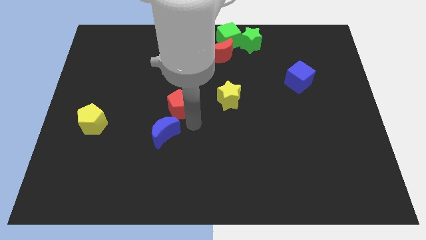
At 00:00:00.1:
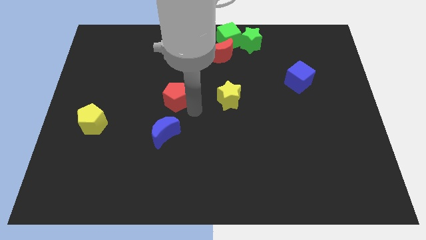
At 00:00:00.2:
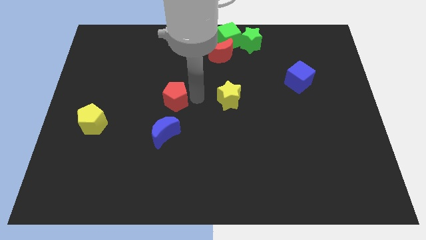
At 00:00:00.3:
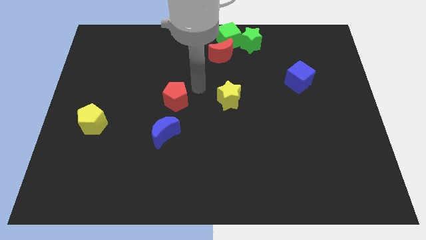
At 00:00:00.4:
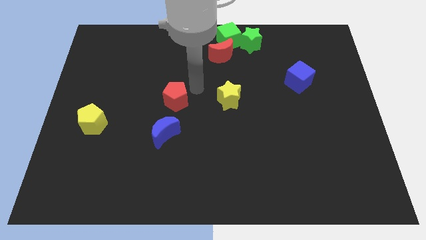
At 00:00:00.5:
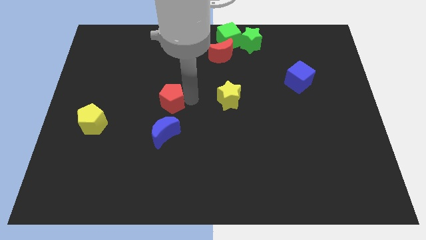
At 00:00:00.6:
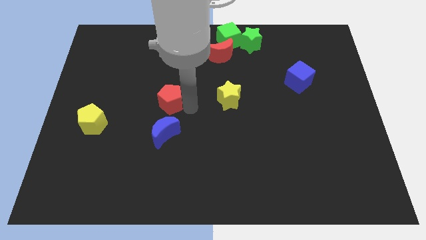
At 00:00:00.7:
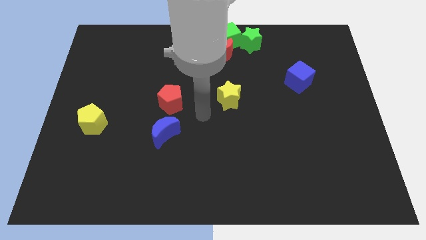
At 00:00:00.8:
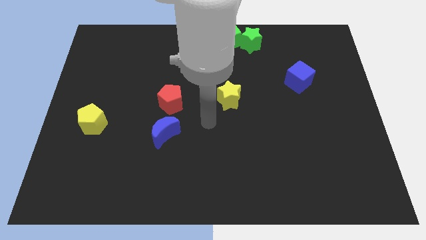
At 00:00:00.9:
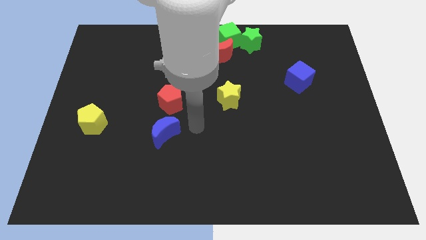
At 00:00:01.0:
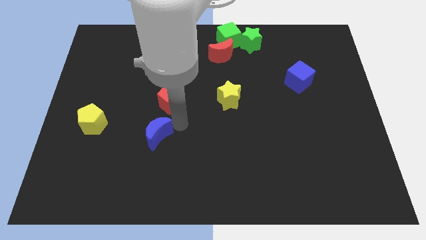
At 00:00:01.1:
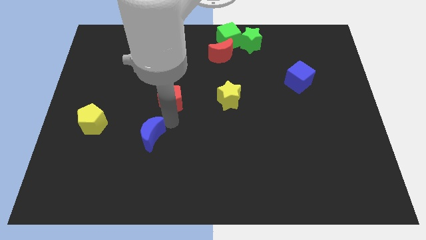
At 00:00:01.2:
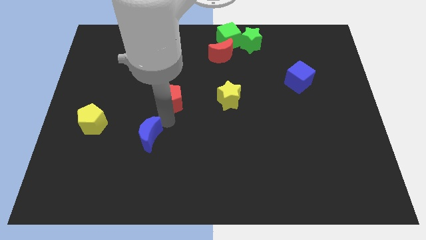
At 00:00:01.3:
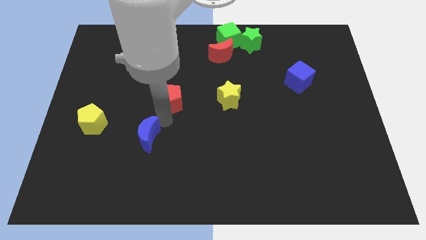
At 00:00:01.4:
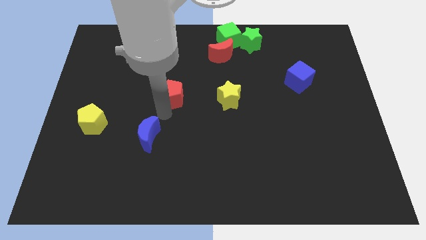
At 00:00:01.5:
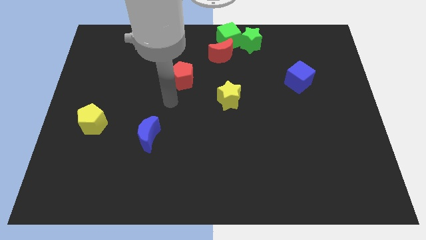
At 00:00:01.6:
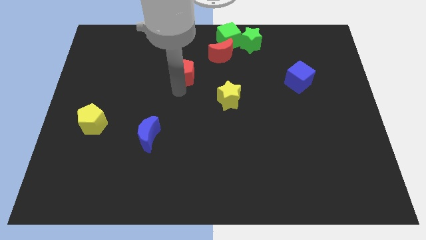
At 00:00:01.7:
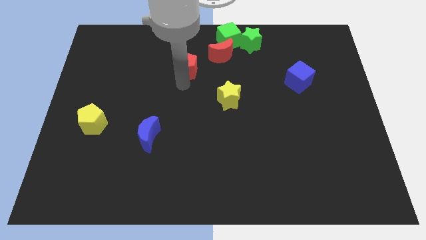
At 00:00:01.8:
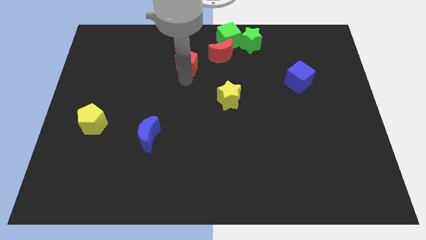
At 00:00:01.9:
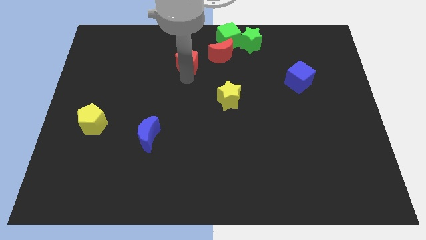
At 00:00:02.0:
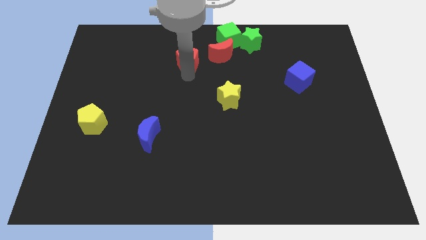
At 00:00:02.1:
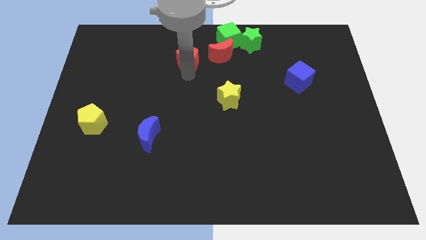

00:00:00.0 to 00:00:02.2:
separate red pentagon from blue moon

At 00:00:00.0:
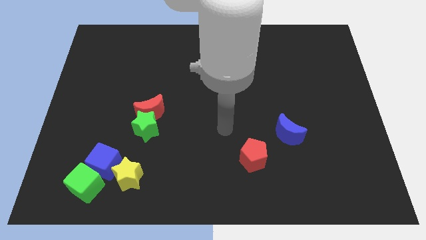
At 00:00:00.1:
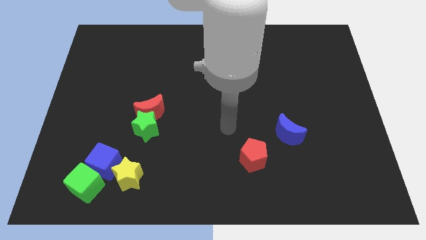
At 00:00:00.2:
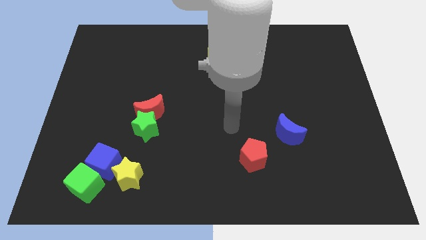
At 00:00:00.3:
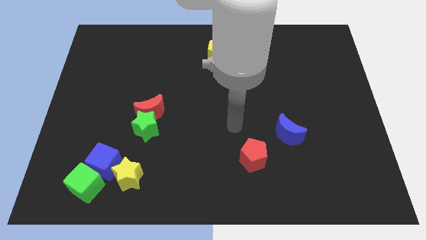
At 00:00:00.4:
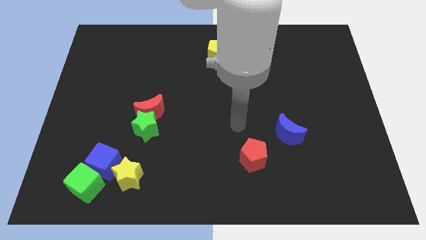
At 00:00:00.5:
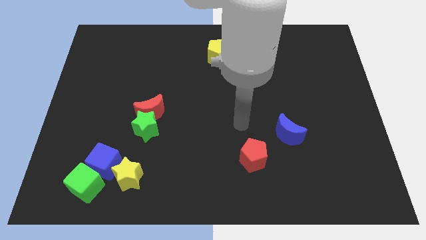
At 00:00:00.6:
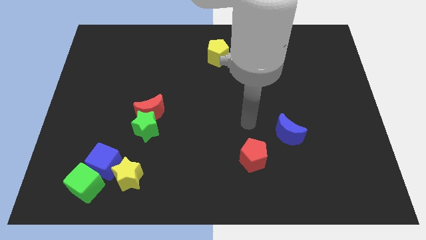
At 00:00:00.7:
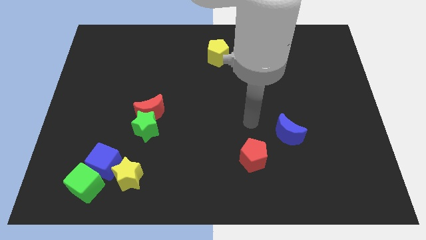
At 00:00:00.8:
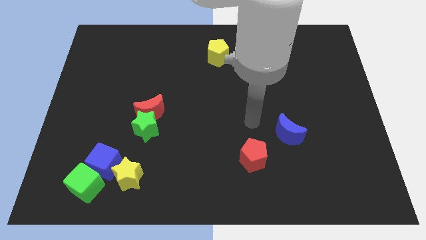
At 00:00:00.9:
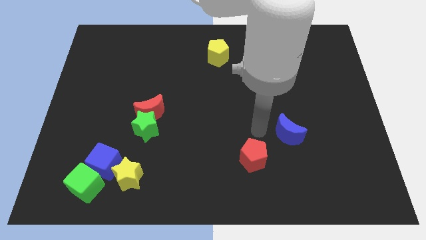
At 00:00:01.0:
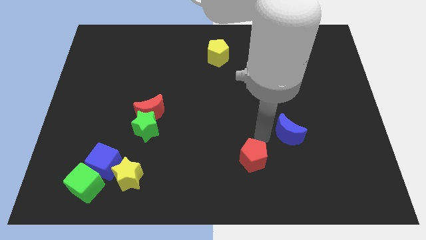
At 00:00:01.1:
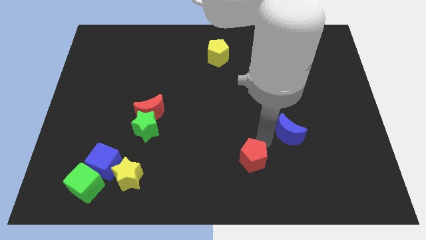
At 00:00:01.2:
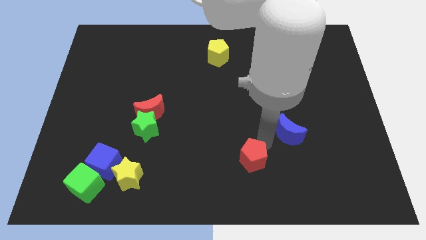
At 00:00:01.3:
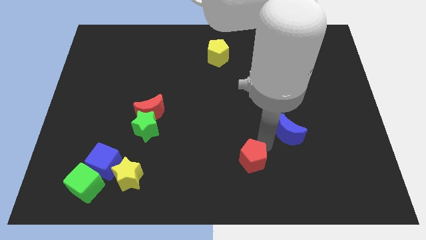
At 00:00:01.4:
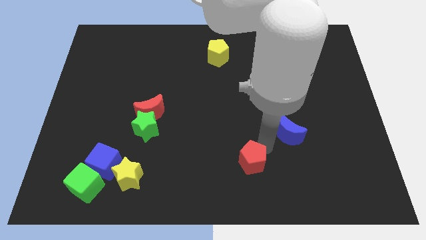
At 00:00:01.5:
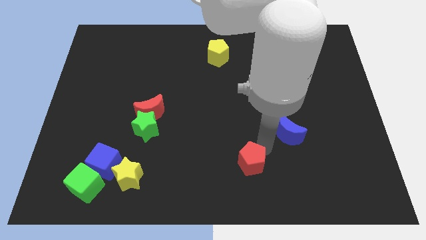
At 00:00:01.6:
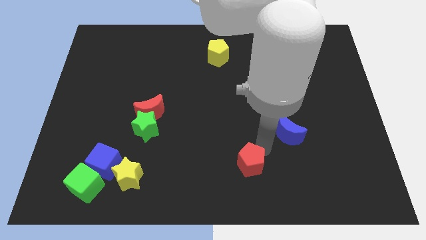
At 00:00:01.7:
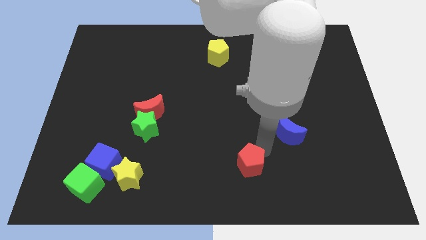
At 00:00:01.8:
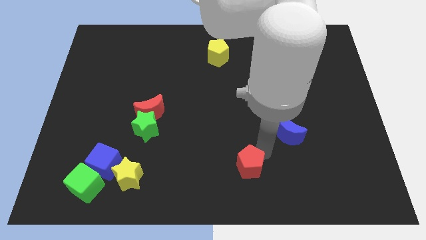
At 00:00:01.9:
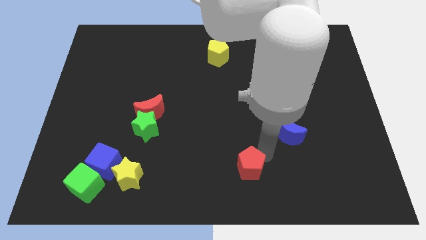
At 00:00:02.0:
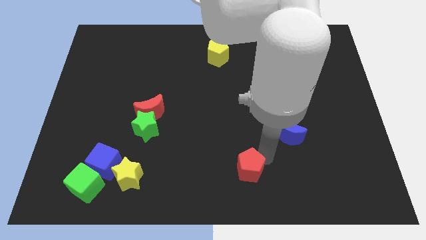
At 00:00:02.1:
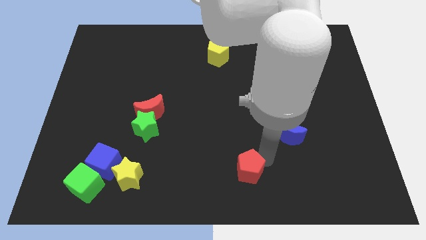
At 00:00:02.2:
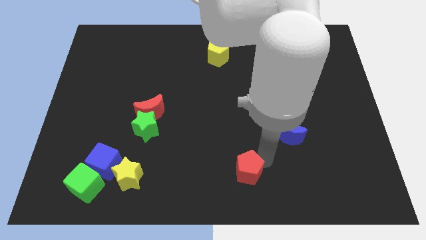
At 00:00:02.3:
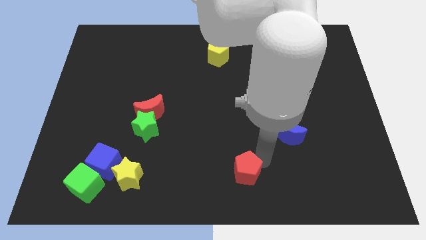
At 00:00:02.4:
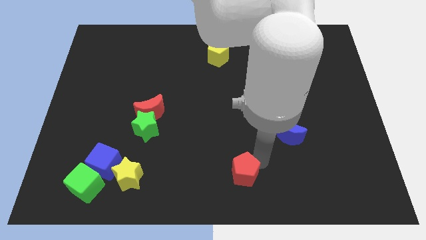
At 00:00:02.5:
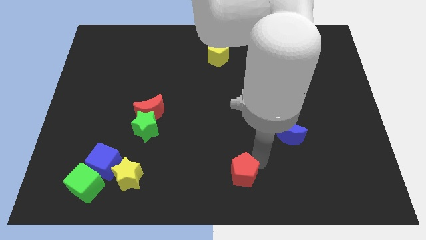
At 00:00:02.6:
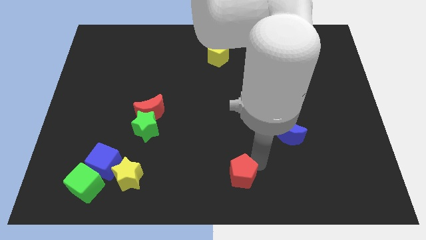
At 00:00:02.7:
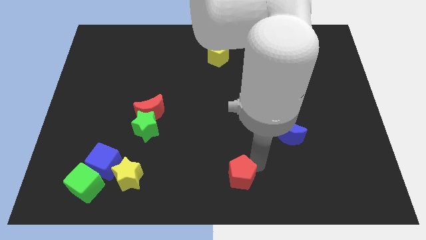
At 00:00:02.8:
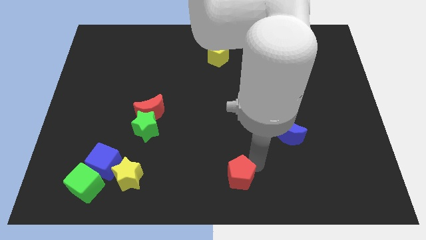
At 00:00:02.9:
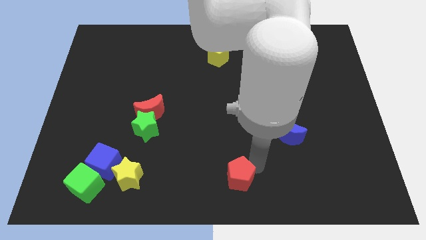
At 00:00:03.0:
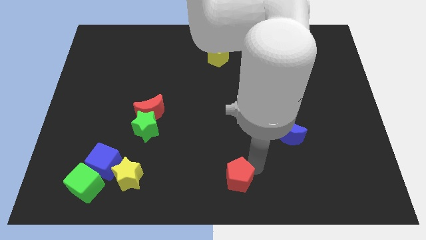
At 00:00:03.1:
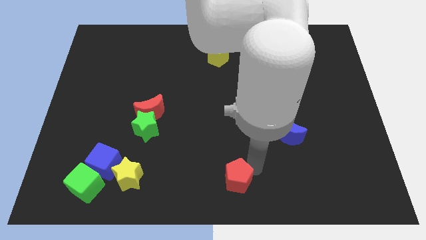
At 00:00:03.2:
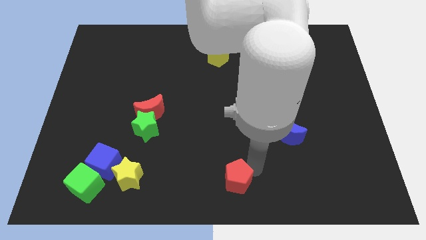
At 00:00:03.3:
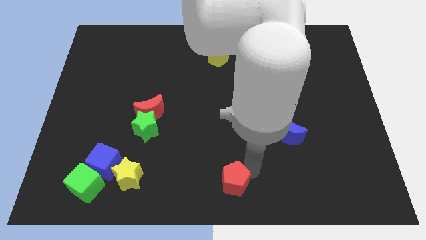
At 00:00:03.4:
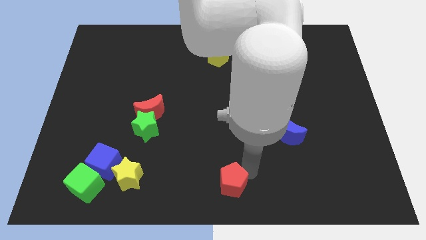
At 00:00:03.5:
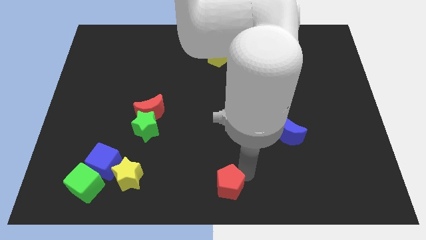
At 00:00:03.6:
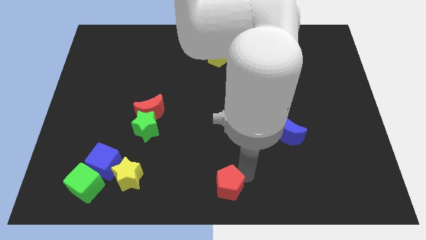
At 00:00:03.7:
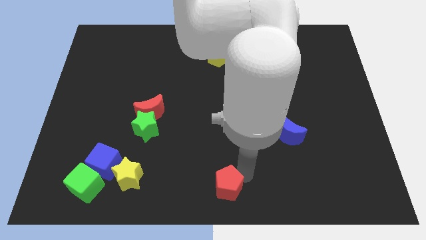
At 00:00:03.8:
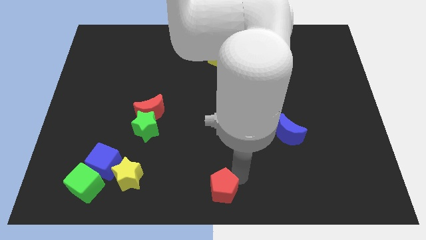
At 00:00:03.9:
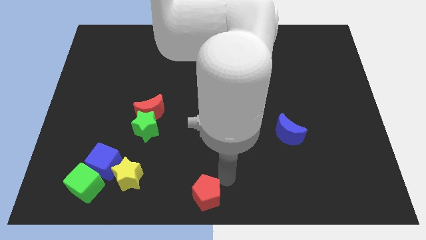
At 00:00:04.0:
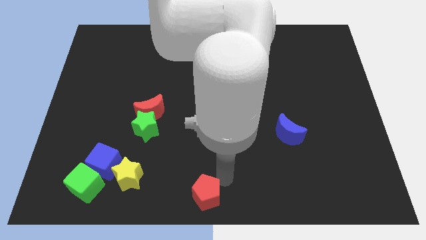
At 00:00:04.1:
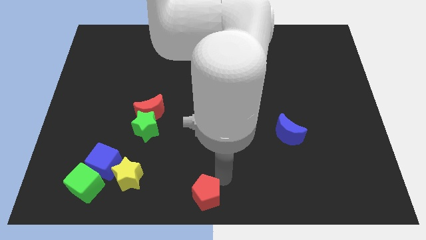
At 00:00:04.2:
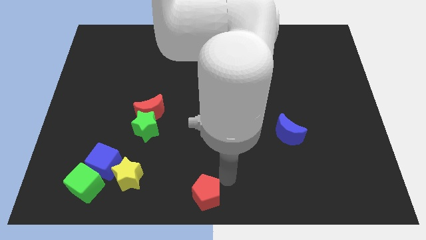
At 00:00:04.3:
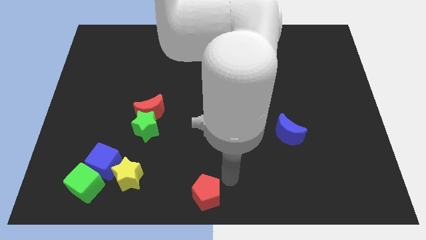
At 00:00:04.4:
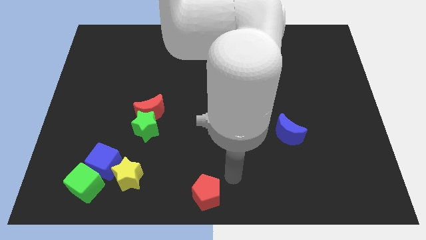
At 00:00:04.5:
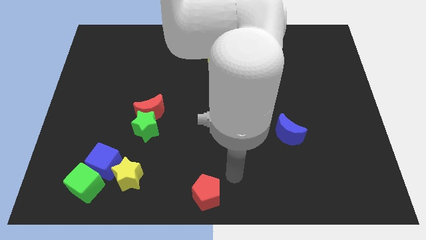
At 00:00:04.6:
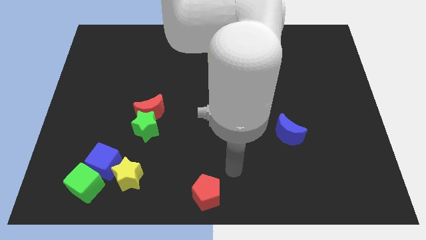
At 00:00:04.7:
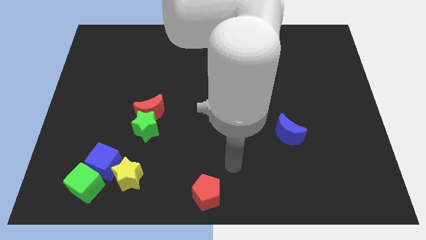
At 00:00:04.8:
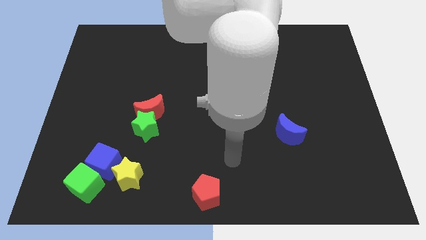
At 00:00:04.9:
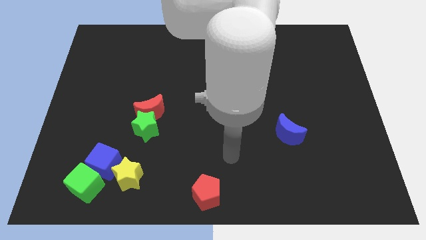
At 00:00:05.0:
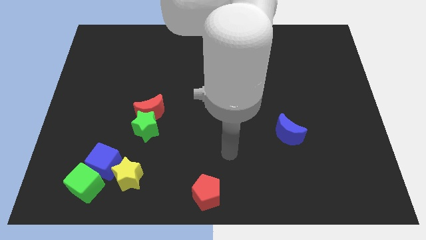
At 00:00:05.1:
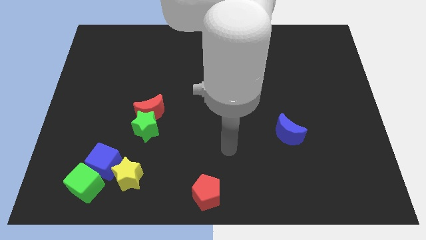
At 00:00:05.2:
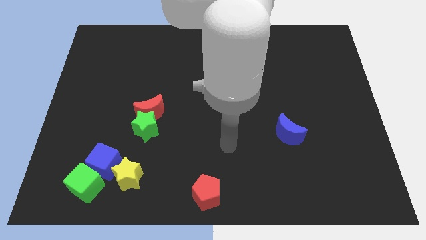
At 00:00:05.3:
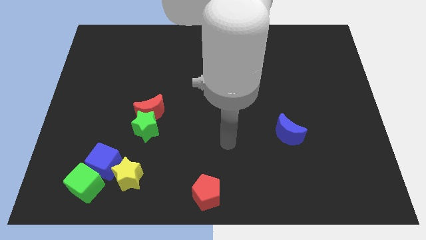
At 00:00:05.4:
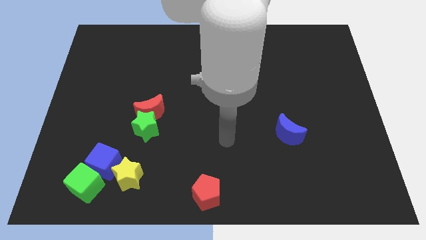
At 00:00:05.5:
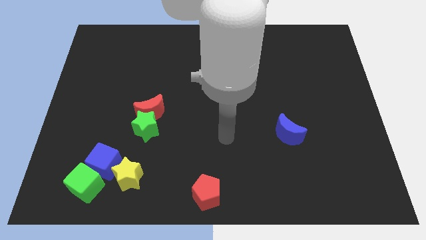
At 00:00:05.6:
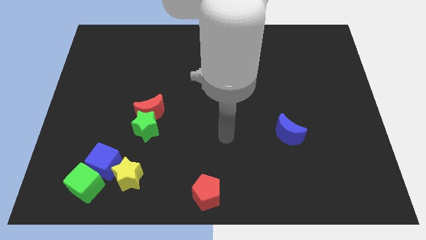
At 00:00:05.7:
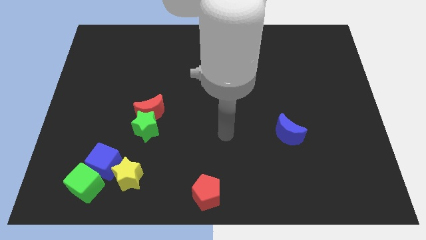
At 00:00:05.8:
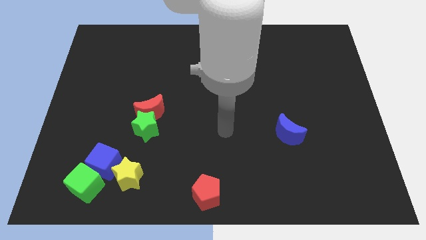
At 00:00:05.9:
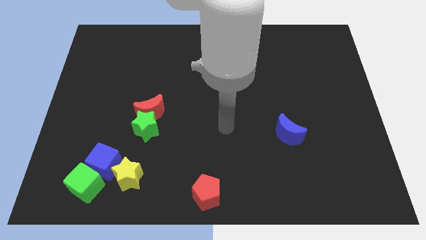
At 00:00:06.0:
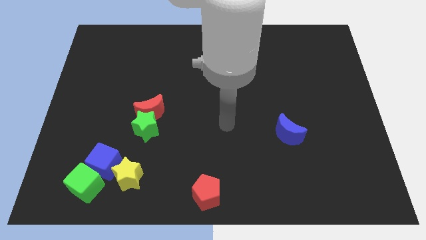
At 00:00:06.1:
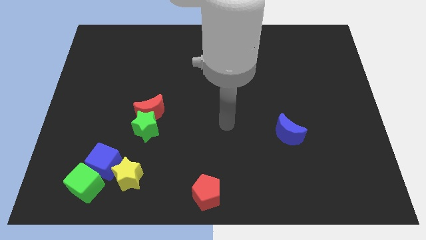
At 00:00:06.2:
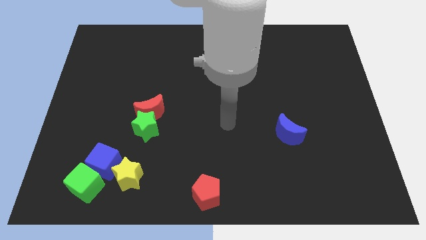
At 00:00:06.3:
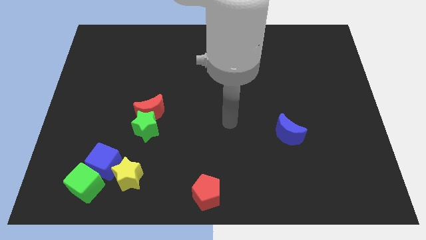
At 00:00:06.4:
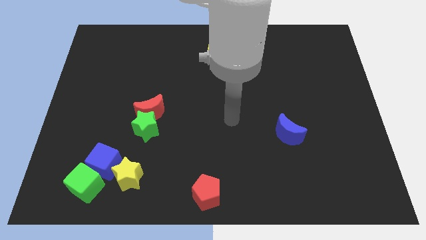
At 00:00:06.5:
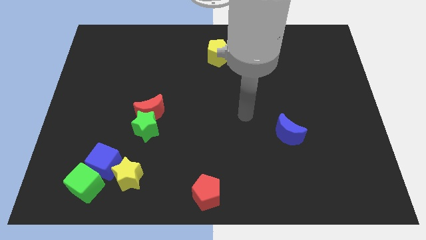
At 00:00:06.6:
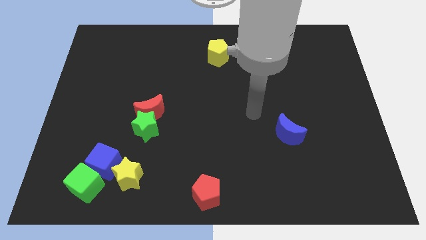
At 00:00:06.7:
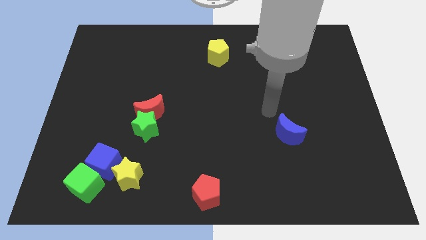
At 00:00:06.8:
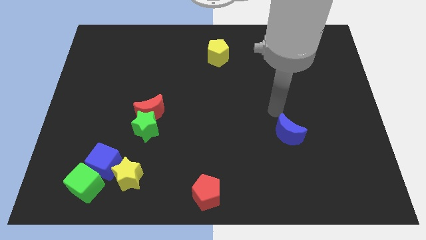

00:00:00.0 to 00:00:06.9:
put the red pentagon to the right of the green star
